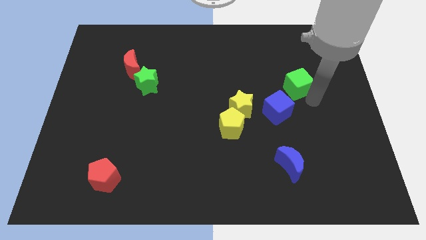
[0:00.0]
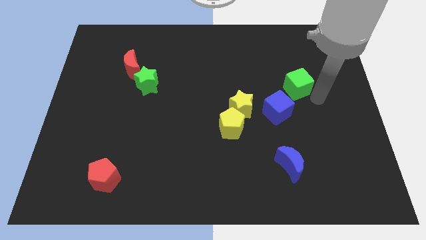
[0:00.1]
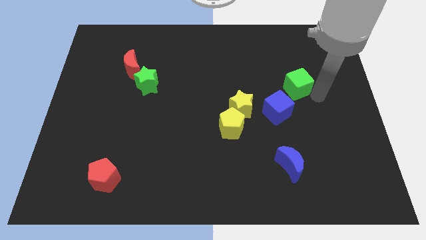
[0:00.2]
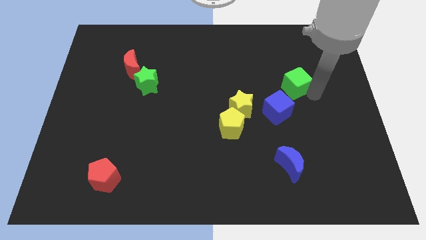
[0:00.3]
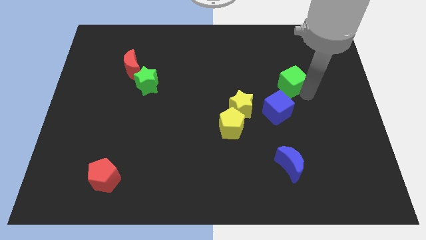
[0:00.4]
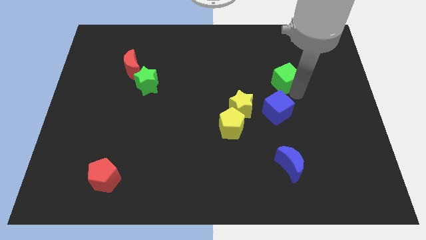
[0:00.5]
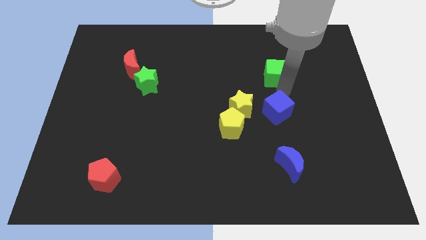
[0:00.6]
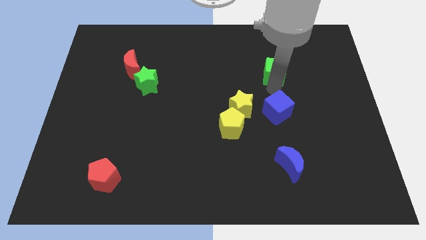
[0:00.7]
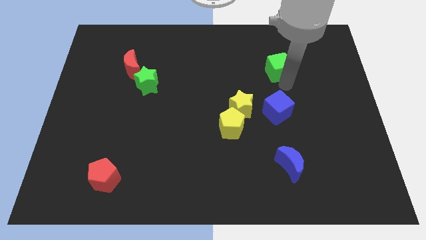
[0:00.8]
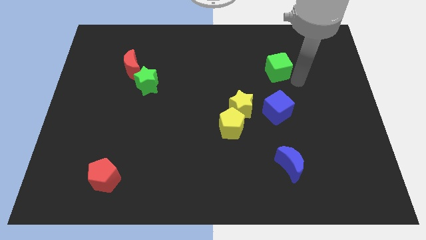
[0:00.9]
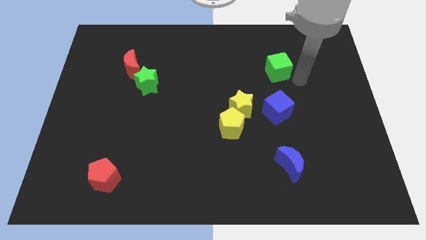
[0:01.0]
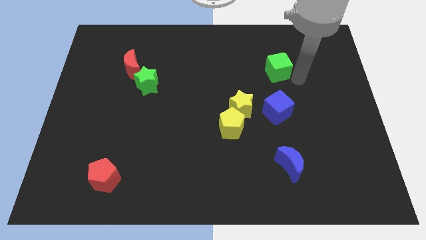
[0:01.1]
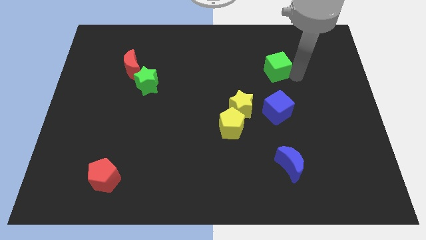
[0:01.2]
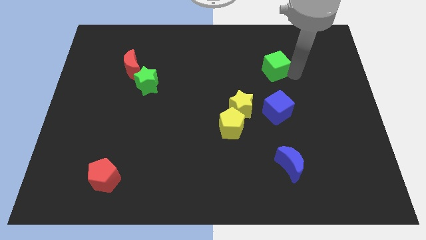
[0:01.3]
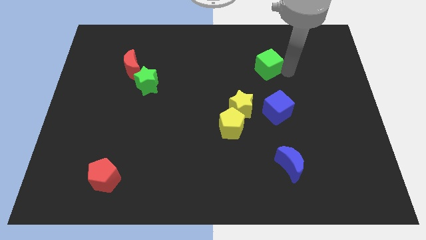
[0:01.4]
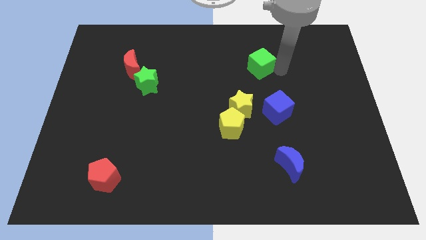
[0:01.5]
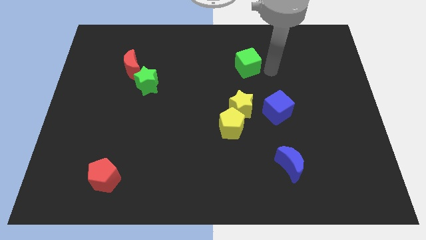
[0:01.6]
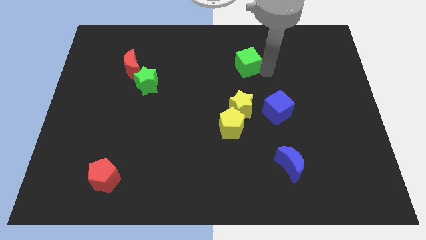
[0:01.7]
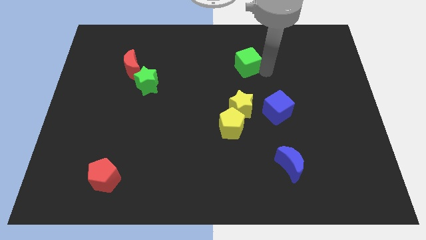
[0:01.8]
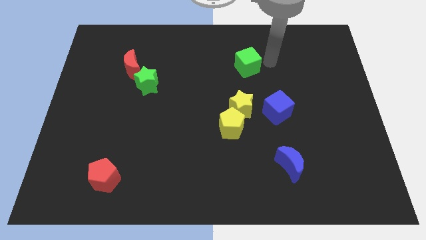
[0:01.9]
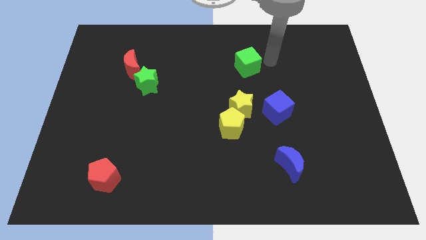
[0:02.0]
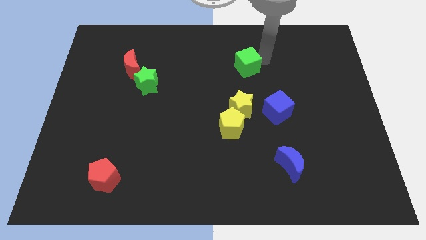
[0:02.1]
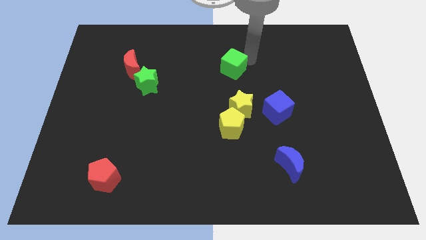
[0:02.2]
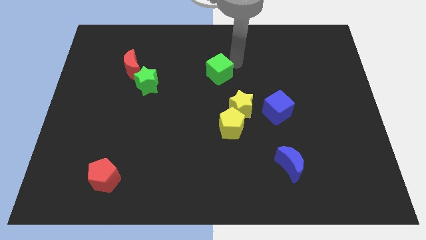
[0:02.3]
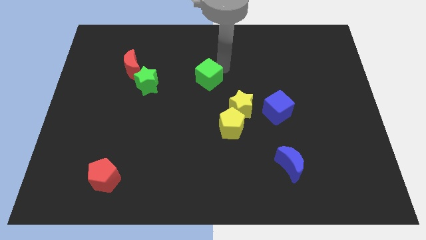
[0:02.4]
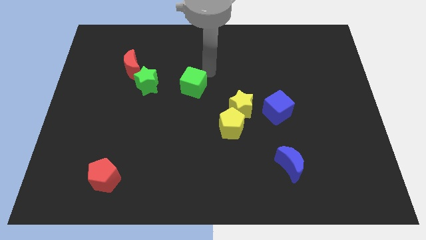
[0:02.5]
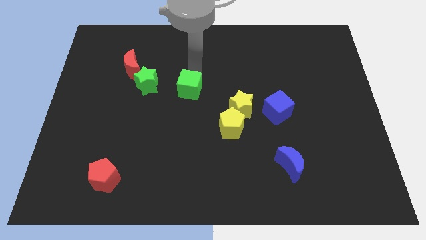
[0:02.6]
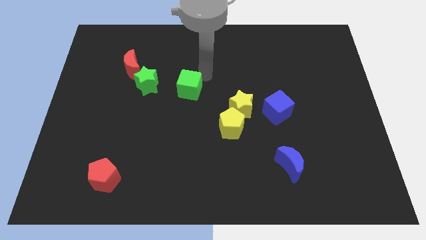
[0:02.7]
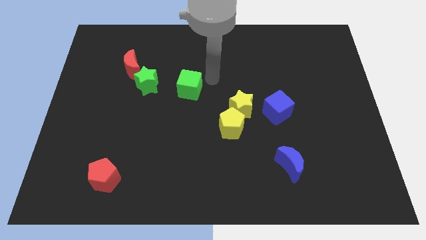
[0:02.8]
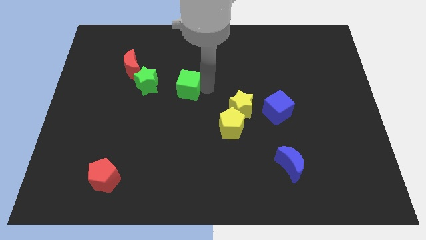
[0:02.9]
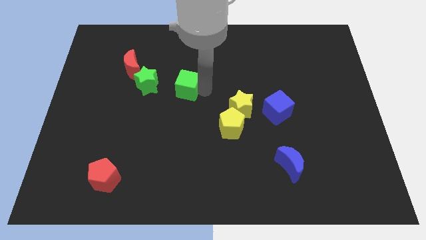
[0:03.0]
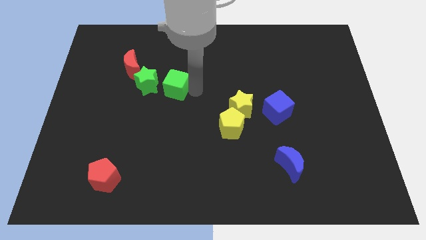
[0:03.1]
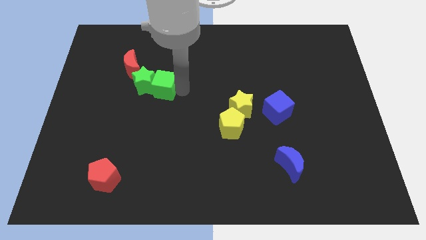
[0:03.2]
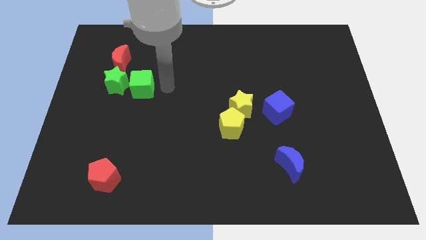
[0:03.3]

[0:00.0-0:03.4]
push the green cube into the green star

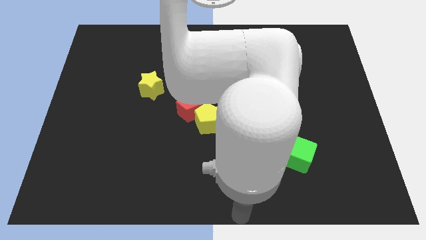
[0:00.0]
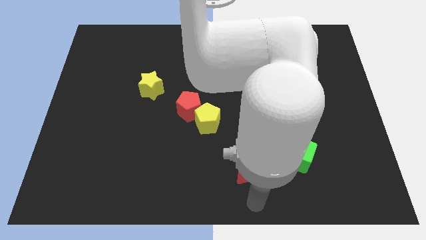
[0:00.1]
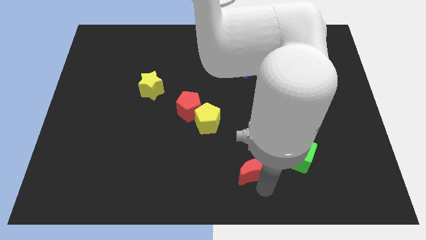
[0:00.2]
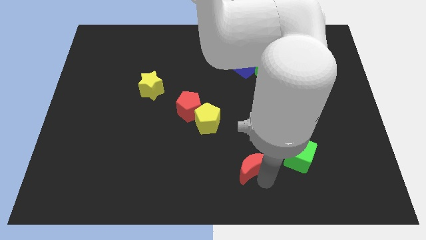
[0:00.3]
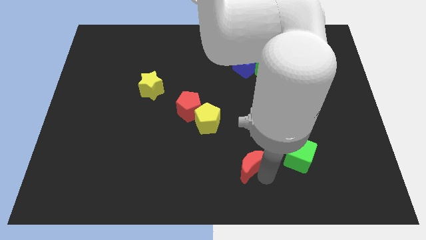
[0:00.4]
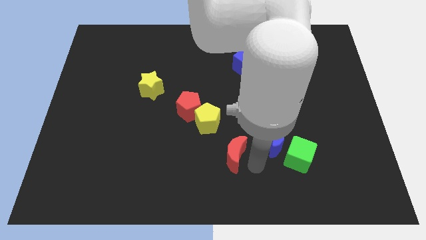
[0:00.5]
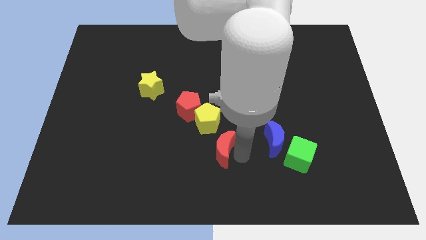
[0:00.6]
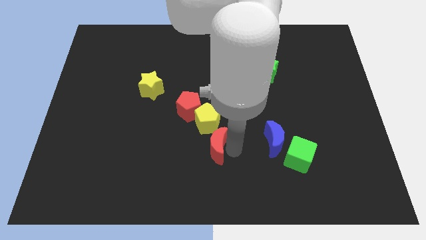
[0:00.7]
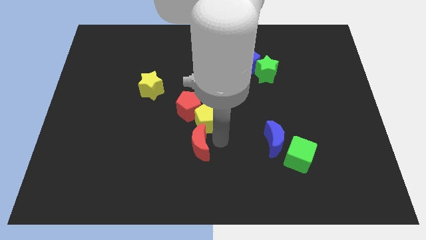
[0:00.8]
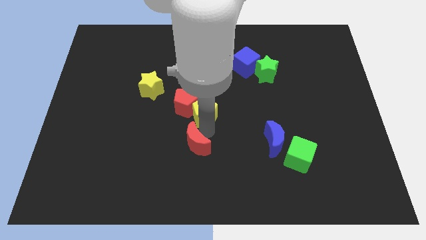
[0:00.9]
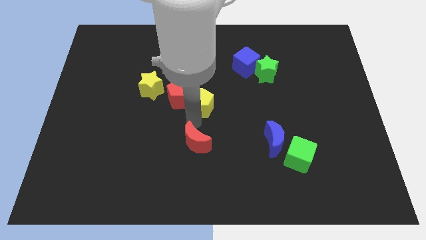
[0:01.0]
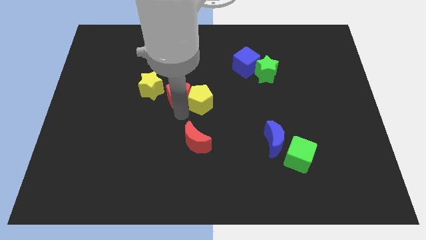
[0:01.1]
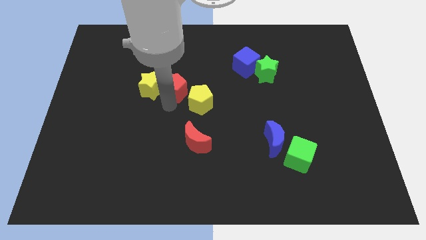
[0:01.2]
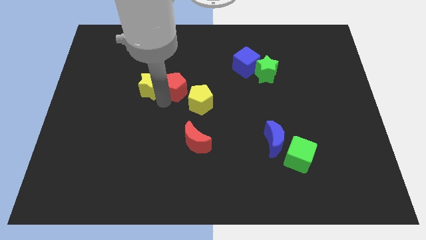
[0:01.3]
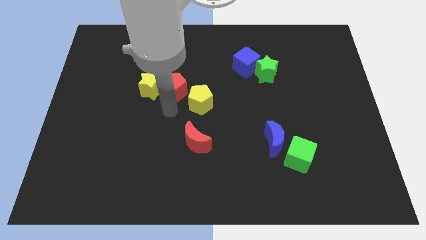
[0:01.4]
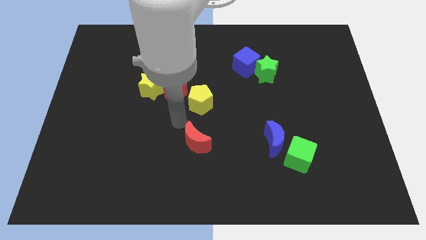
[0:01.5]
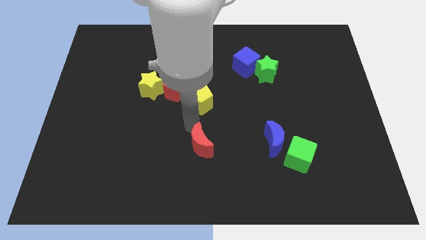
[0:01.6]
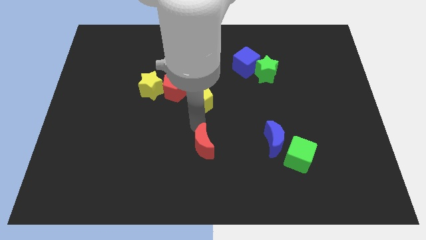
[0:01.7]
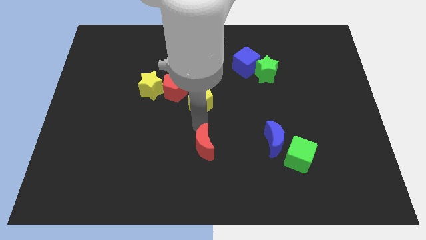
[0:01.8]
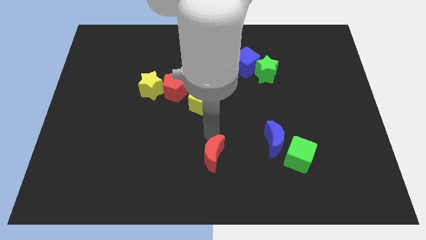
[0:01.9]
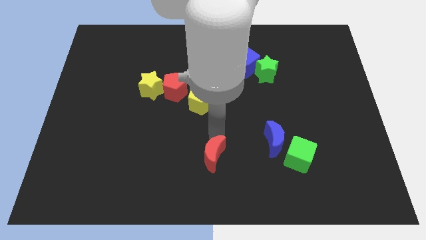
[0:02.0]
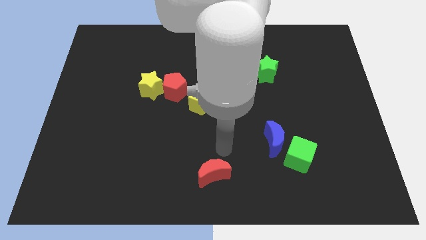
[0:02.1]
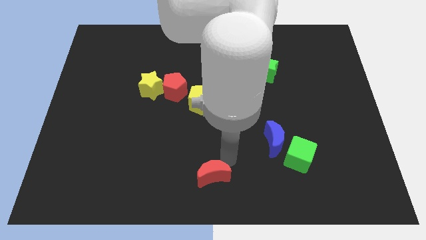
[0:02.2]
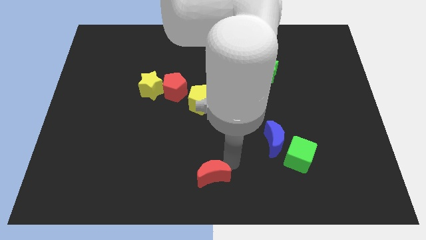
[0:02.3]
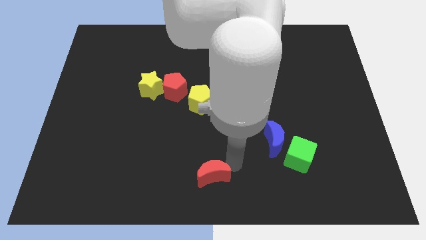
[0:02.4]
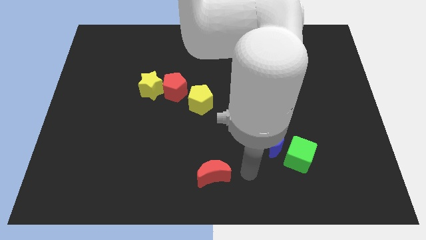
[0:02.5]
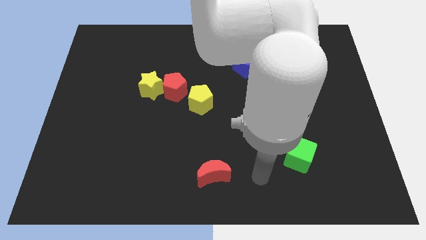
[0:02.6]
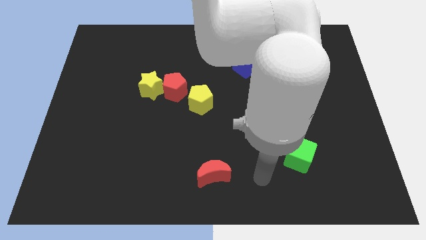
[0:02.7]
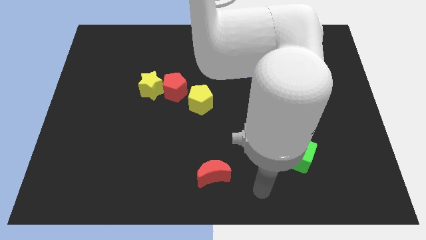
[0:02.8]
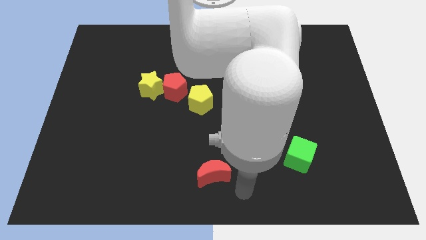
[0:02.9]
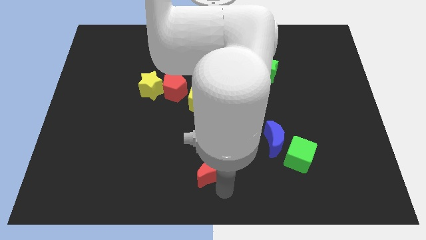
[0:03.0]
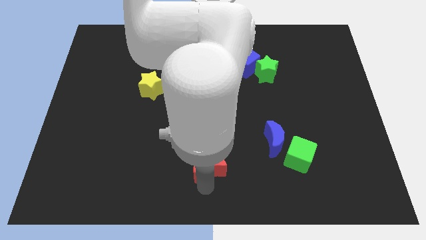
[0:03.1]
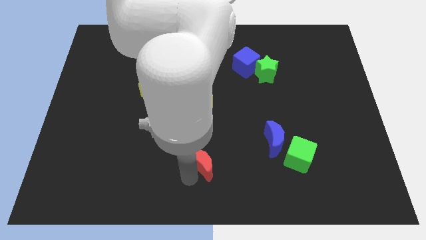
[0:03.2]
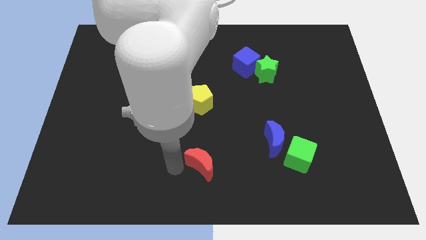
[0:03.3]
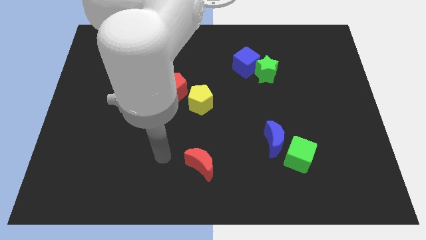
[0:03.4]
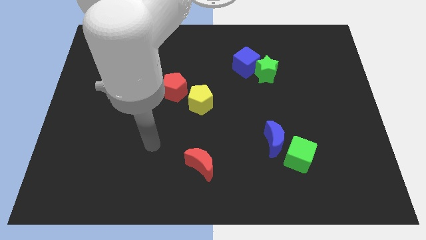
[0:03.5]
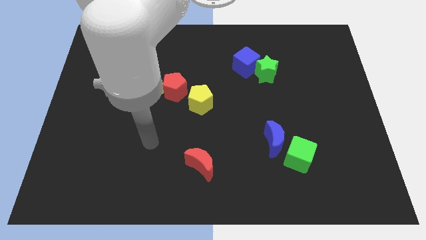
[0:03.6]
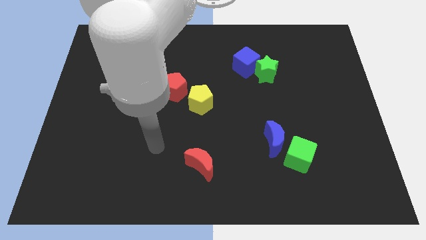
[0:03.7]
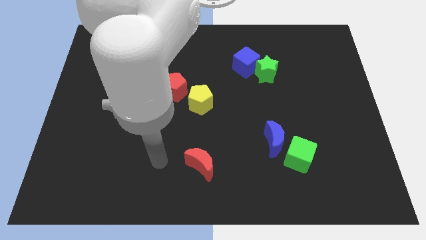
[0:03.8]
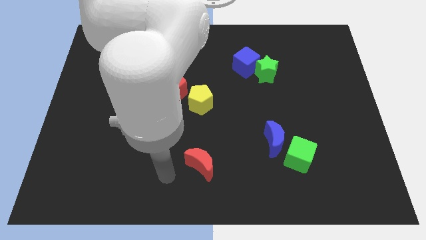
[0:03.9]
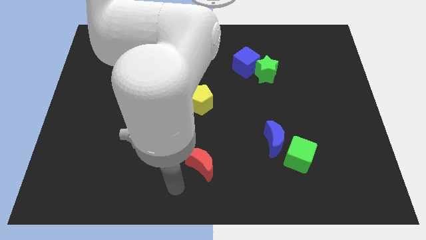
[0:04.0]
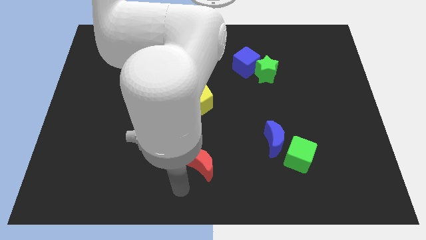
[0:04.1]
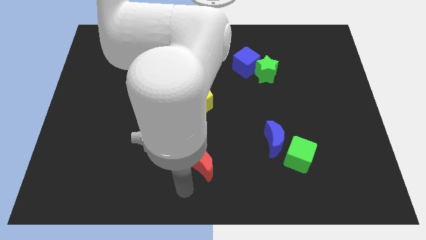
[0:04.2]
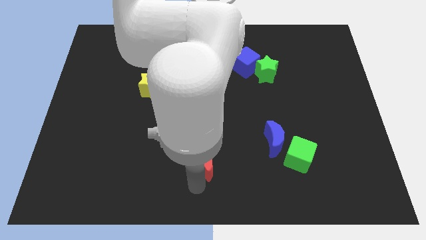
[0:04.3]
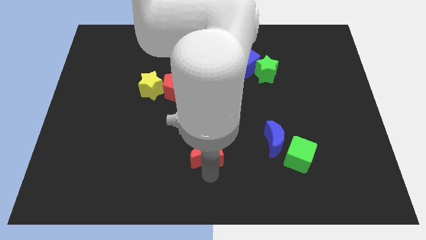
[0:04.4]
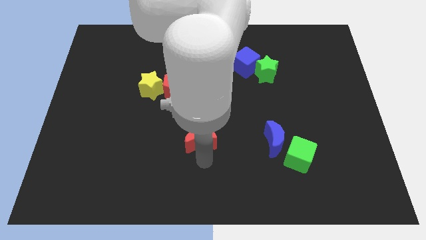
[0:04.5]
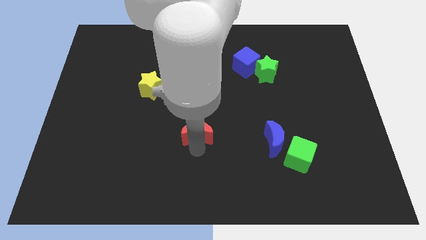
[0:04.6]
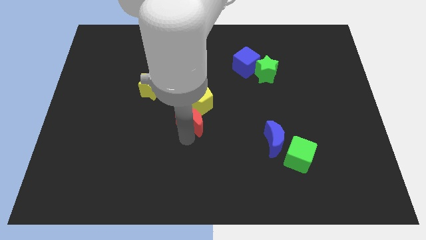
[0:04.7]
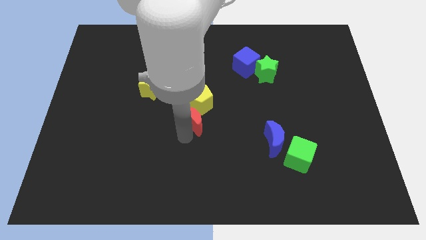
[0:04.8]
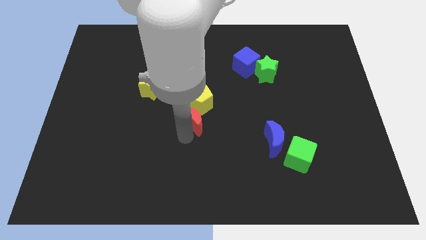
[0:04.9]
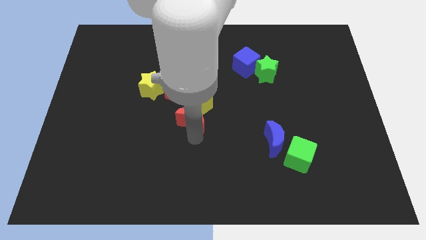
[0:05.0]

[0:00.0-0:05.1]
slide red moon into yellow pentagon

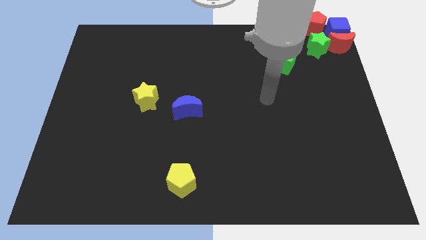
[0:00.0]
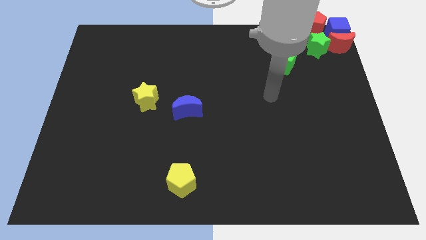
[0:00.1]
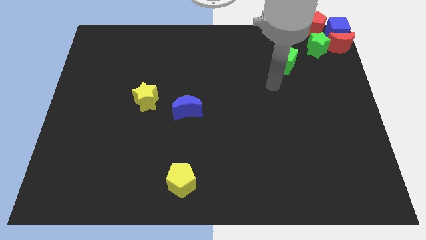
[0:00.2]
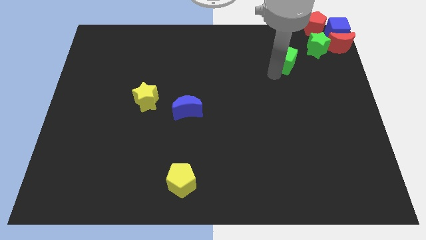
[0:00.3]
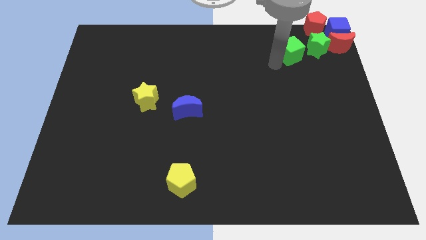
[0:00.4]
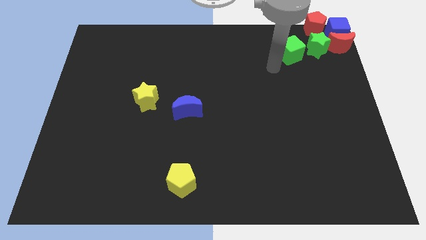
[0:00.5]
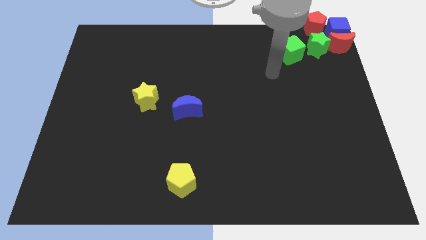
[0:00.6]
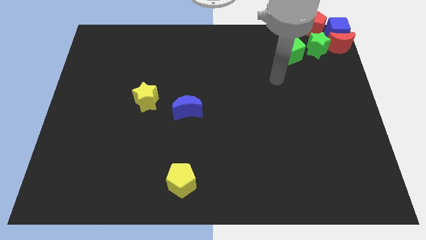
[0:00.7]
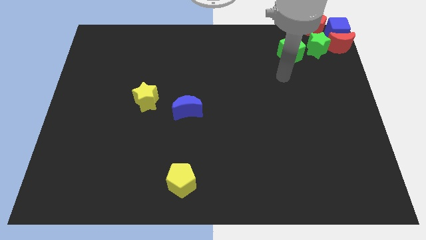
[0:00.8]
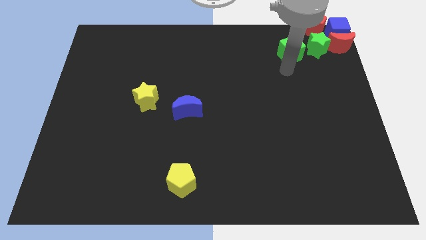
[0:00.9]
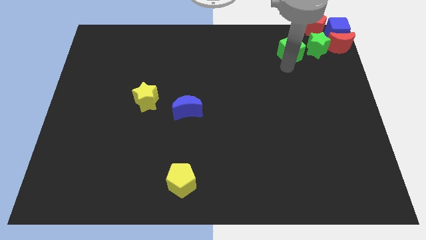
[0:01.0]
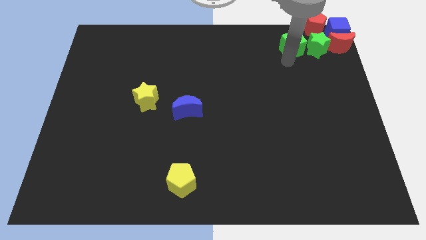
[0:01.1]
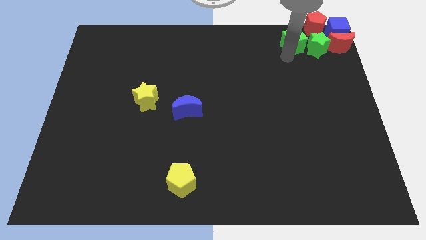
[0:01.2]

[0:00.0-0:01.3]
move the green cube left beside the green star
